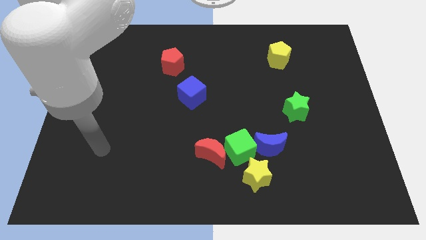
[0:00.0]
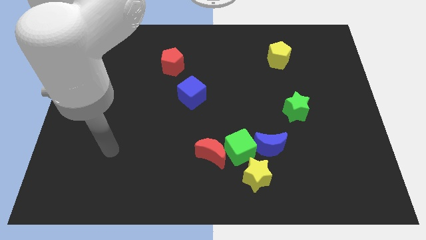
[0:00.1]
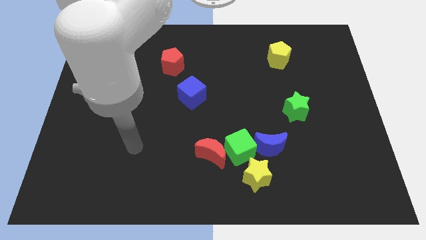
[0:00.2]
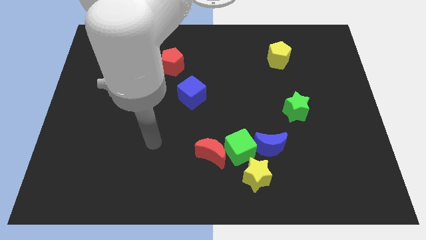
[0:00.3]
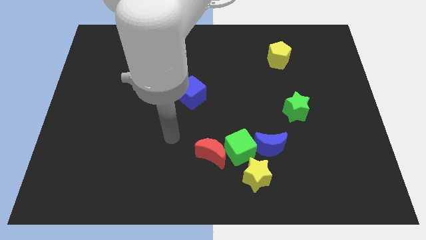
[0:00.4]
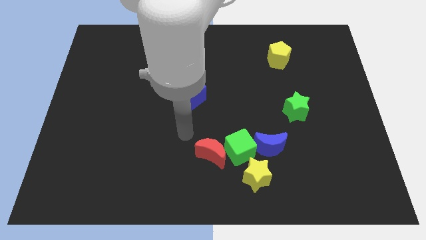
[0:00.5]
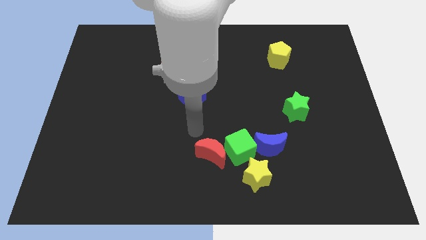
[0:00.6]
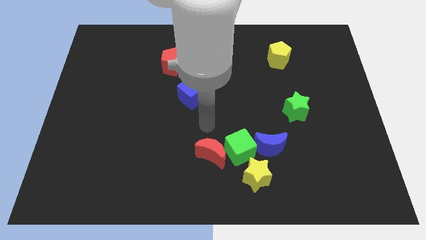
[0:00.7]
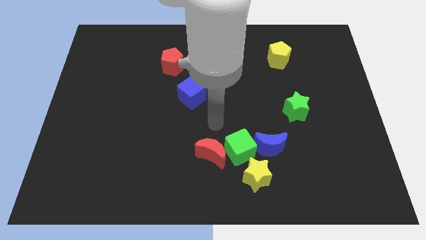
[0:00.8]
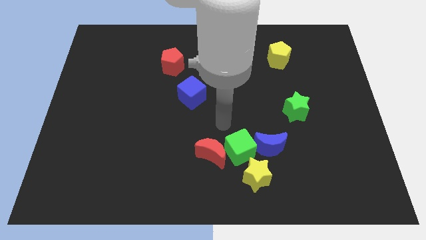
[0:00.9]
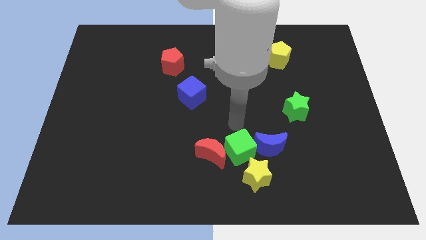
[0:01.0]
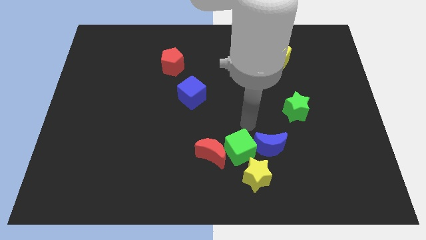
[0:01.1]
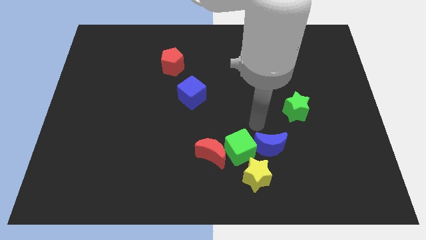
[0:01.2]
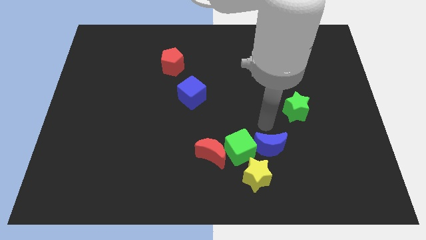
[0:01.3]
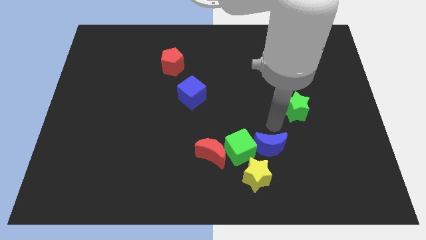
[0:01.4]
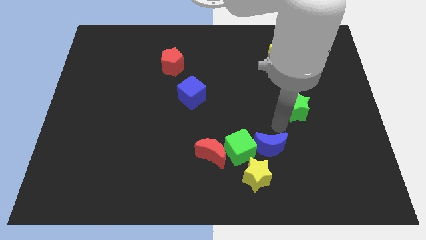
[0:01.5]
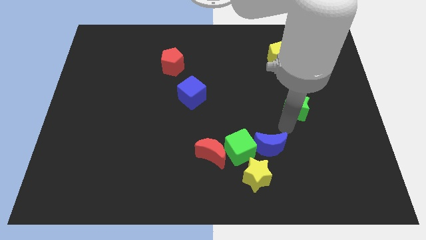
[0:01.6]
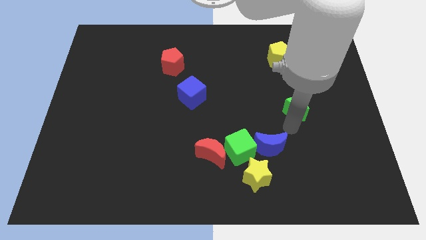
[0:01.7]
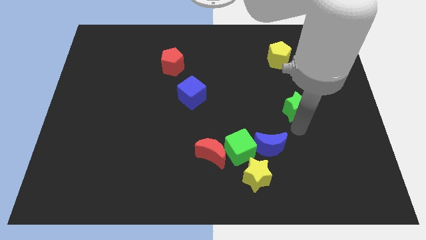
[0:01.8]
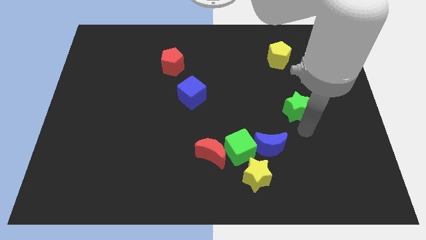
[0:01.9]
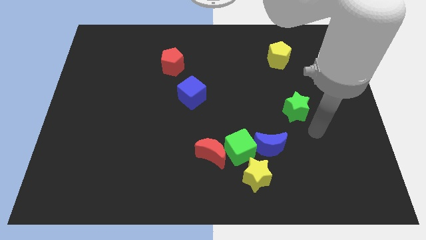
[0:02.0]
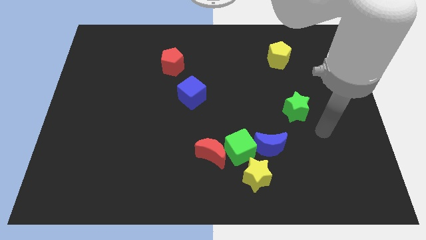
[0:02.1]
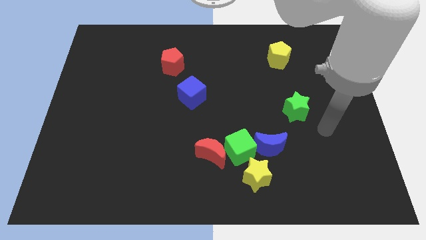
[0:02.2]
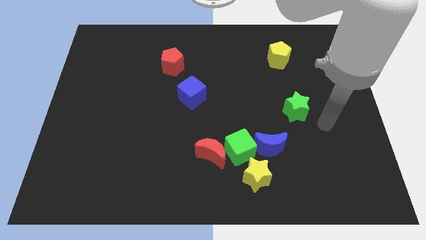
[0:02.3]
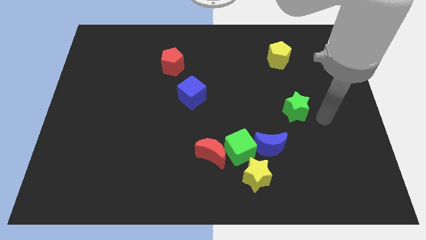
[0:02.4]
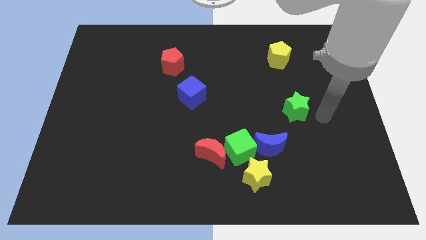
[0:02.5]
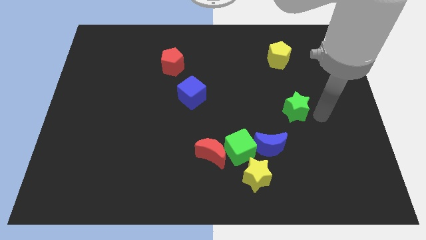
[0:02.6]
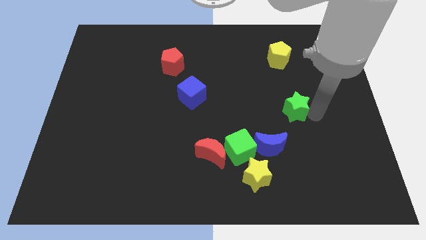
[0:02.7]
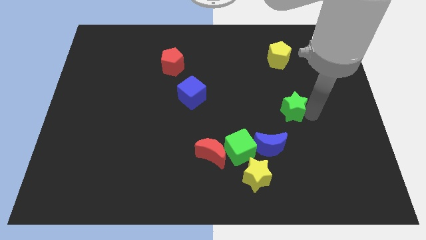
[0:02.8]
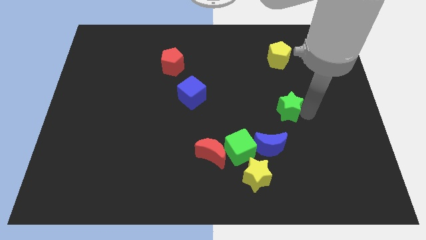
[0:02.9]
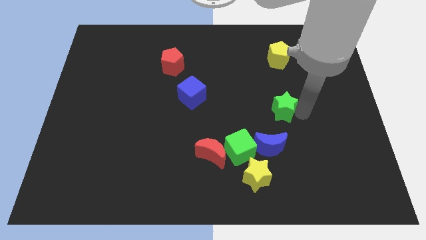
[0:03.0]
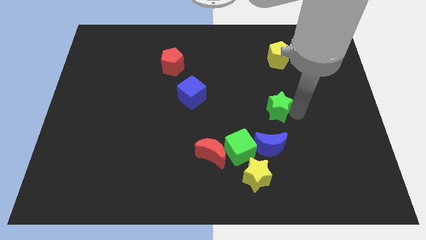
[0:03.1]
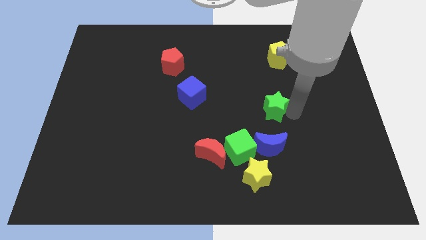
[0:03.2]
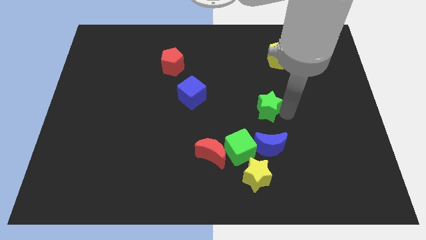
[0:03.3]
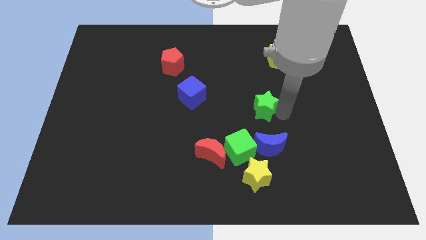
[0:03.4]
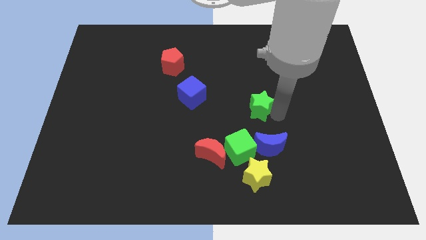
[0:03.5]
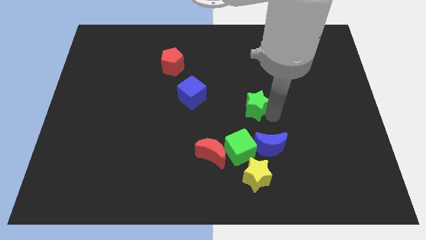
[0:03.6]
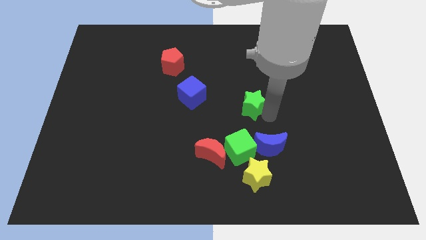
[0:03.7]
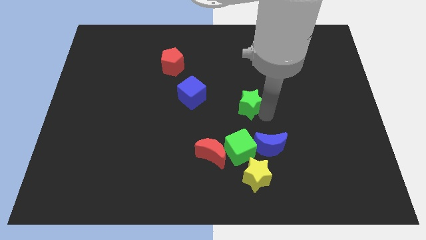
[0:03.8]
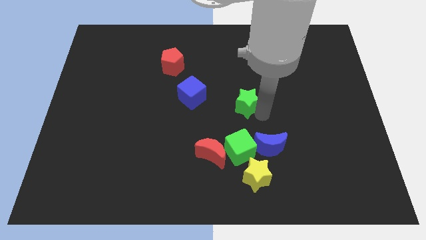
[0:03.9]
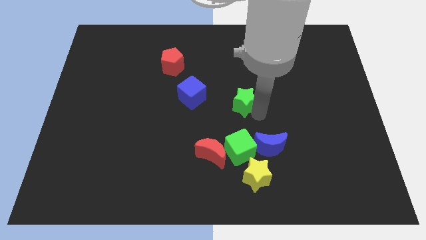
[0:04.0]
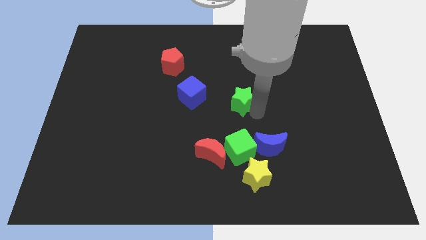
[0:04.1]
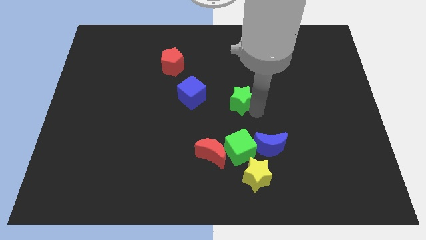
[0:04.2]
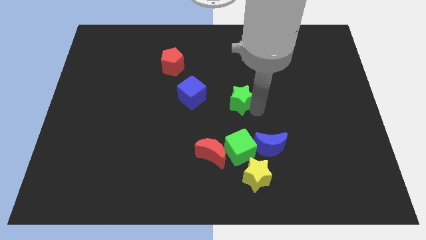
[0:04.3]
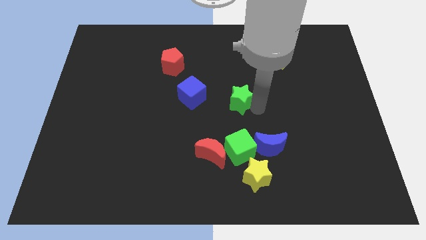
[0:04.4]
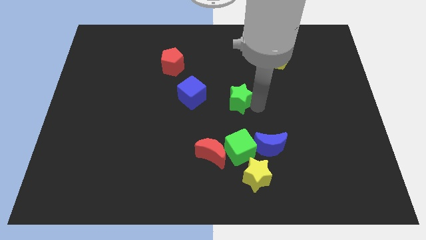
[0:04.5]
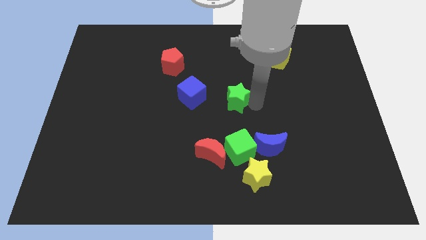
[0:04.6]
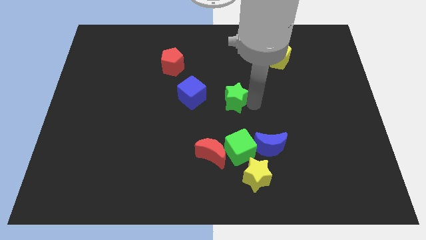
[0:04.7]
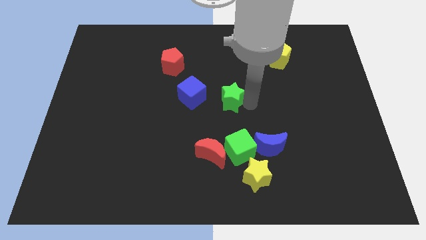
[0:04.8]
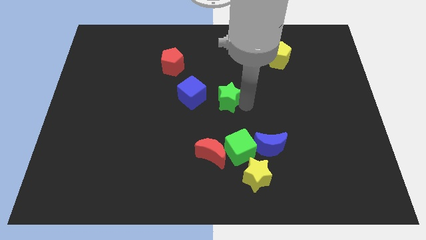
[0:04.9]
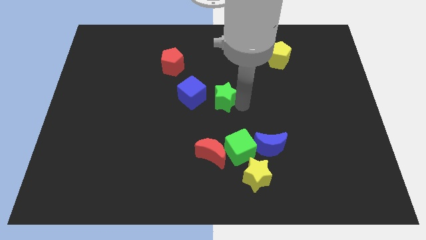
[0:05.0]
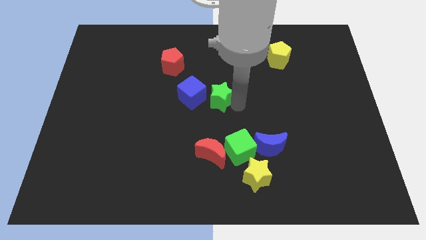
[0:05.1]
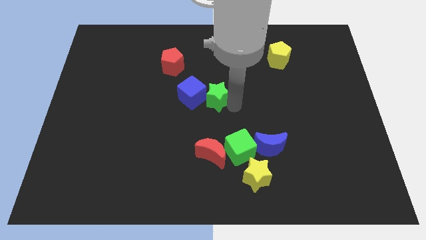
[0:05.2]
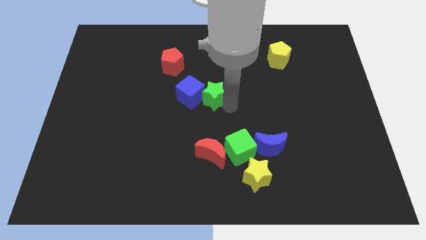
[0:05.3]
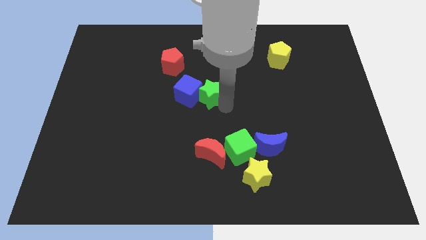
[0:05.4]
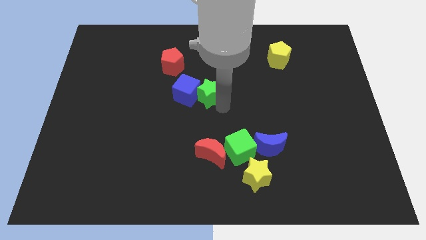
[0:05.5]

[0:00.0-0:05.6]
push the green star to the blue cube

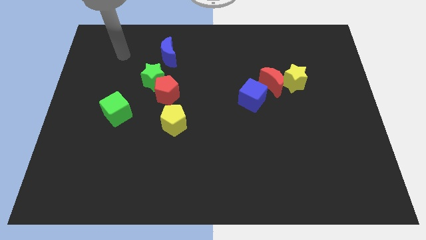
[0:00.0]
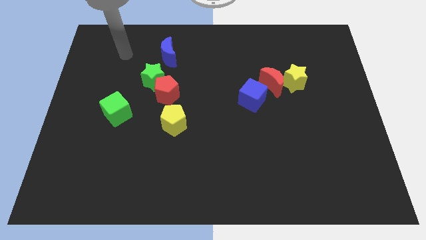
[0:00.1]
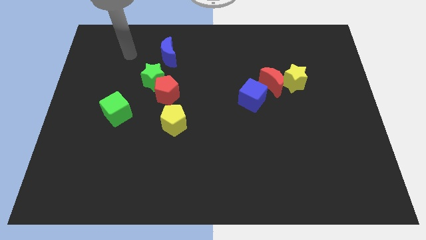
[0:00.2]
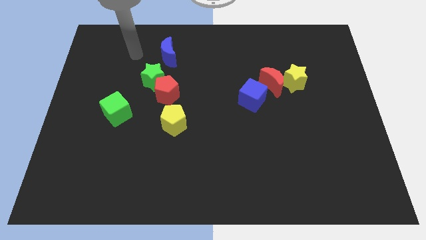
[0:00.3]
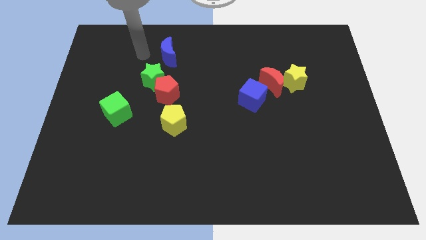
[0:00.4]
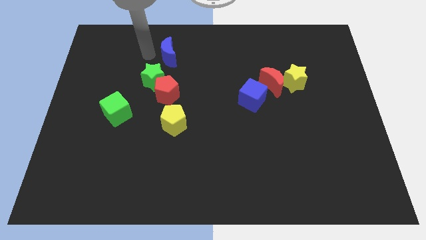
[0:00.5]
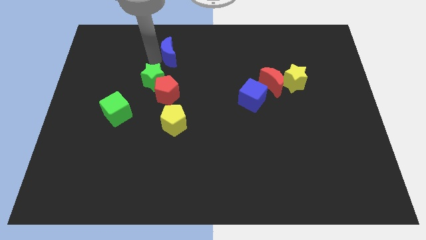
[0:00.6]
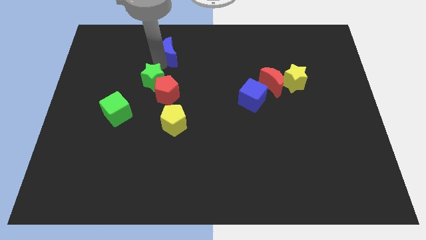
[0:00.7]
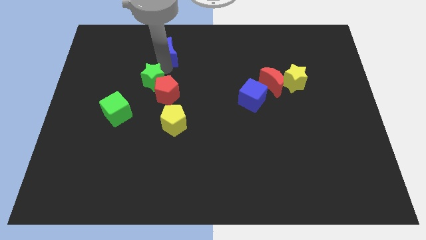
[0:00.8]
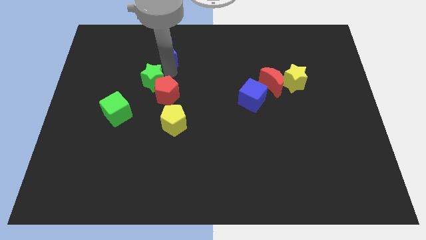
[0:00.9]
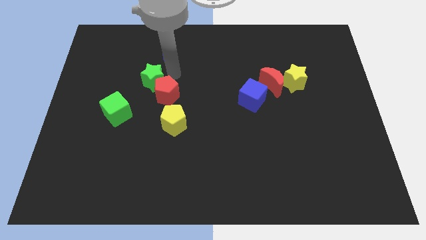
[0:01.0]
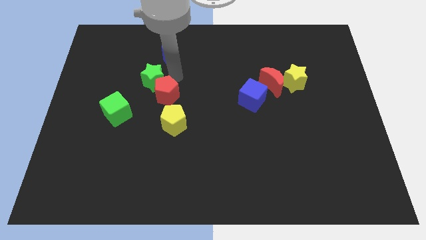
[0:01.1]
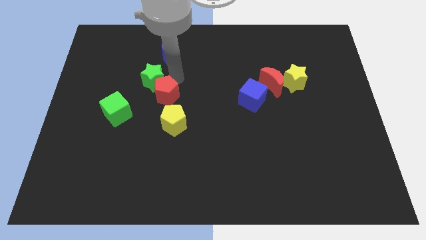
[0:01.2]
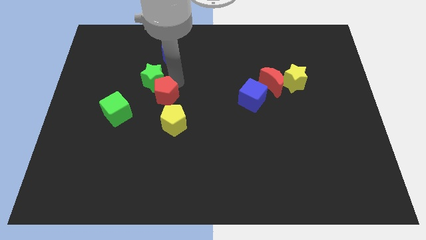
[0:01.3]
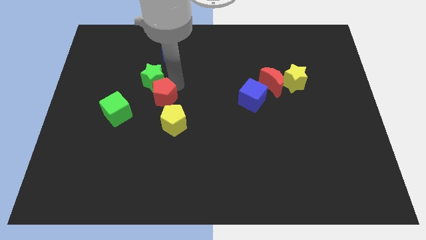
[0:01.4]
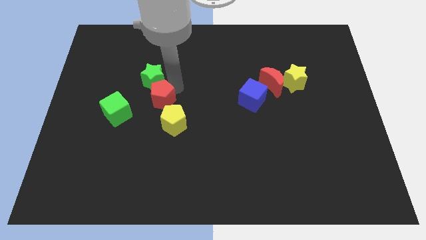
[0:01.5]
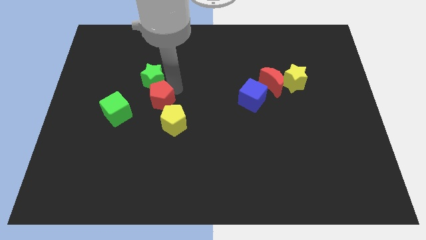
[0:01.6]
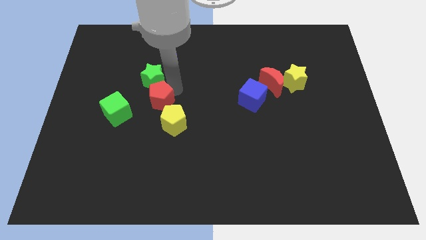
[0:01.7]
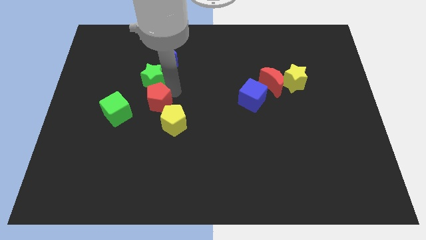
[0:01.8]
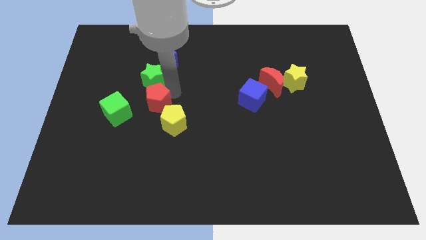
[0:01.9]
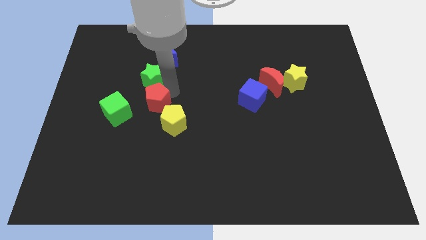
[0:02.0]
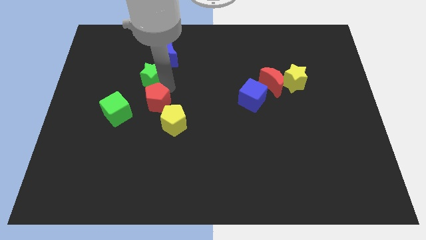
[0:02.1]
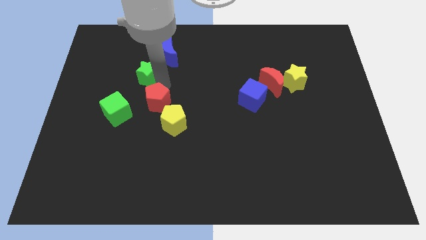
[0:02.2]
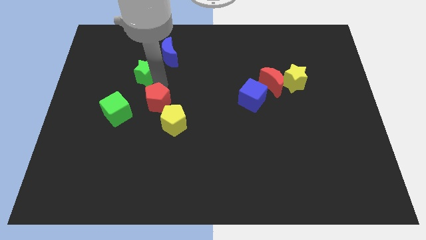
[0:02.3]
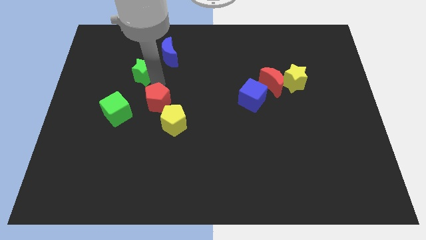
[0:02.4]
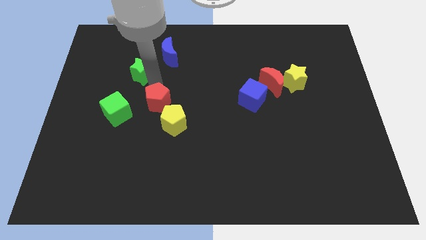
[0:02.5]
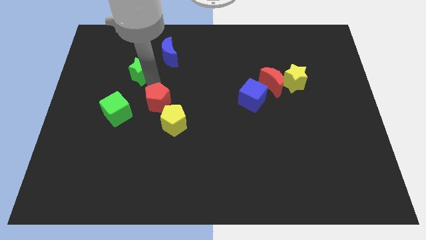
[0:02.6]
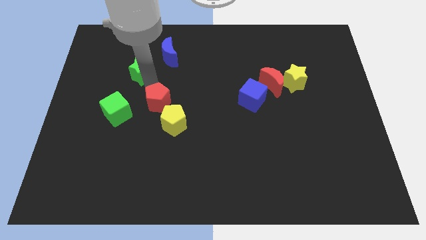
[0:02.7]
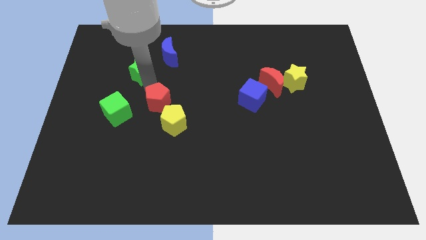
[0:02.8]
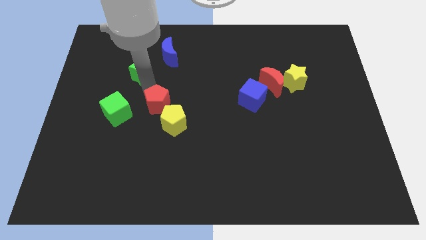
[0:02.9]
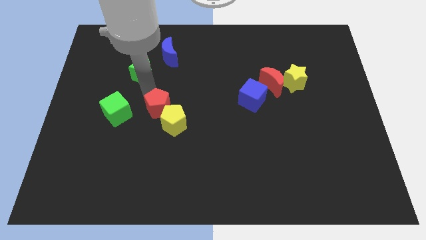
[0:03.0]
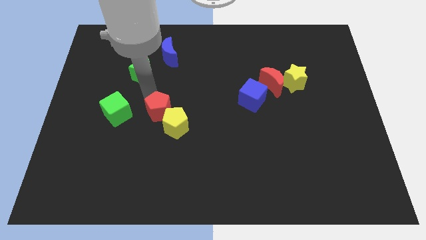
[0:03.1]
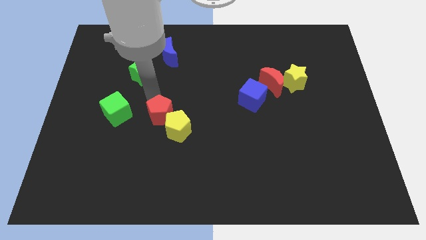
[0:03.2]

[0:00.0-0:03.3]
slide the red pentagon towards the yellow pentagon
